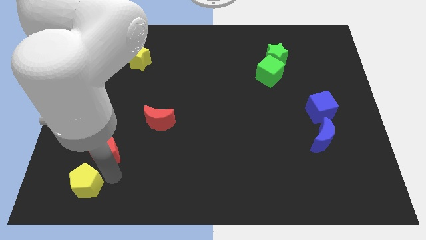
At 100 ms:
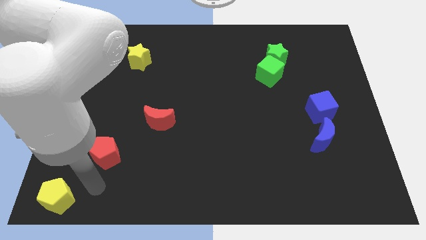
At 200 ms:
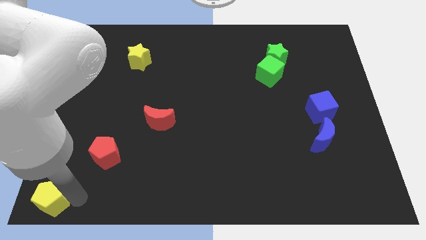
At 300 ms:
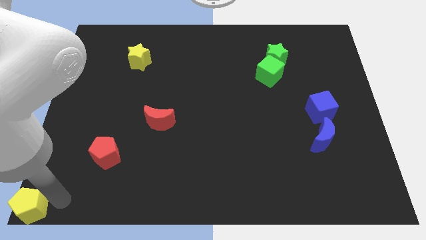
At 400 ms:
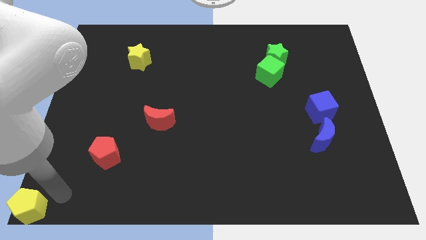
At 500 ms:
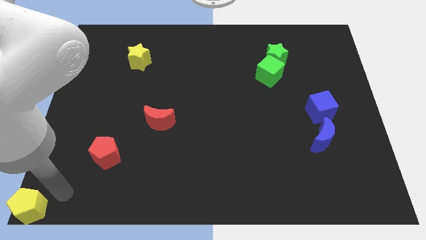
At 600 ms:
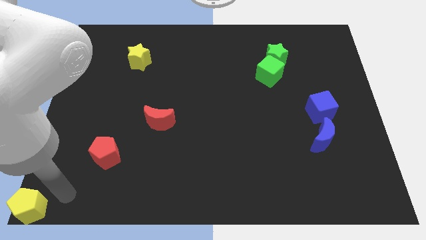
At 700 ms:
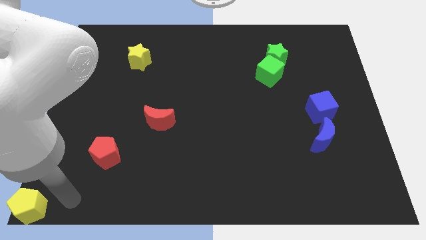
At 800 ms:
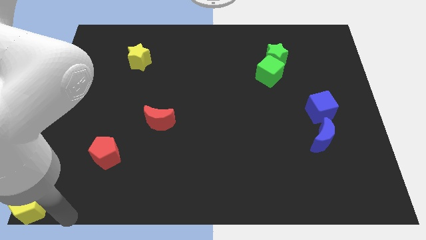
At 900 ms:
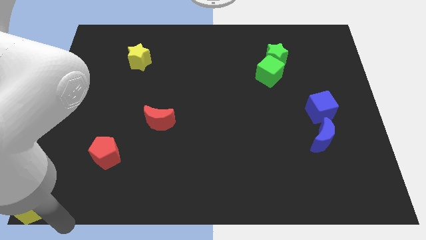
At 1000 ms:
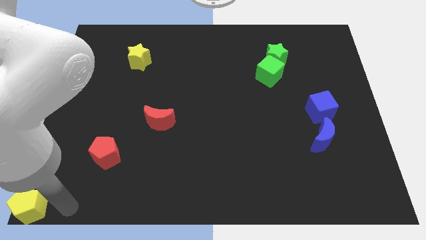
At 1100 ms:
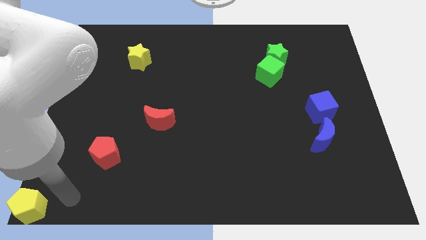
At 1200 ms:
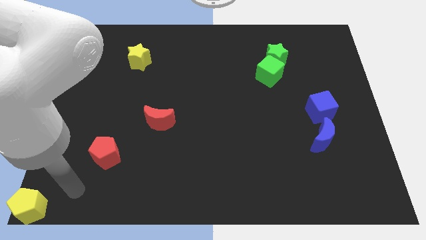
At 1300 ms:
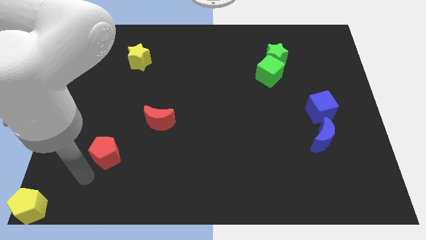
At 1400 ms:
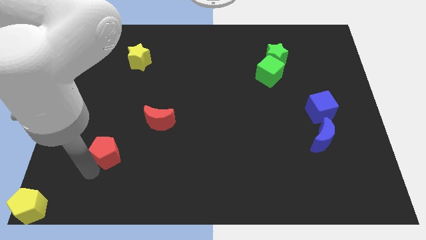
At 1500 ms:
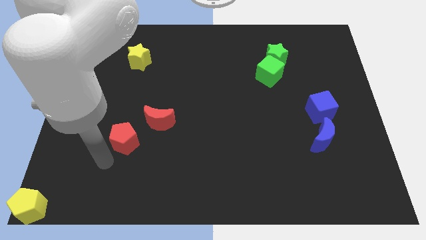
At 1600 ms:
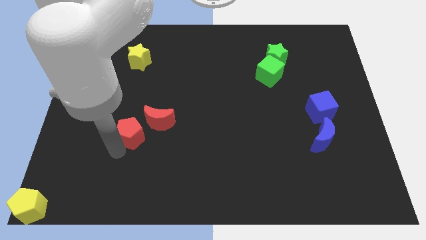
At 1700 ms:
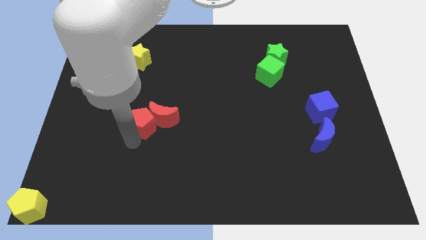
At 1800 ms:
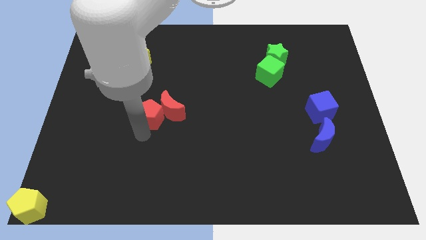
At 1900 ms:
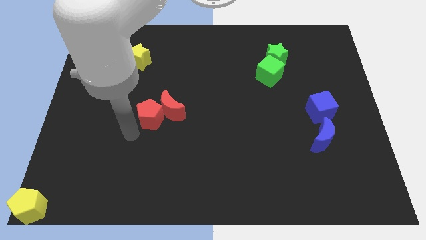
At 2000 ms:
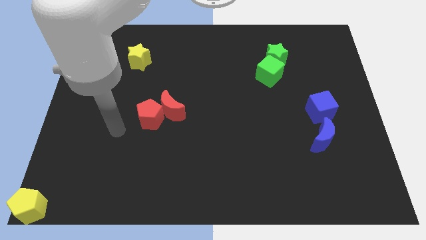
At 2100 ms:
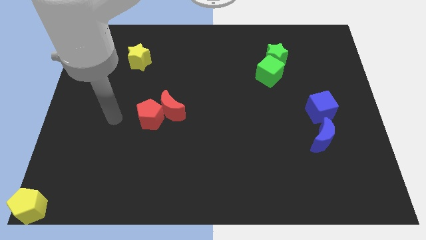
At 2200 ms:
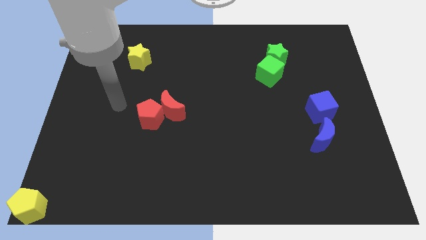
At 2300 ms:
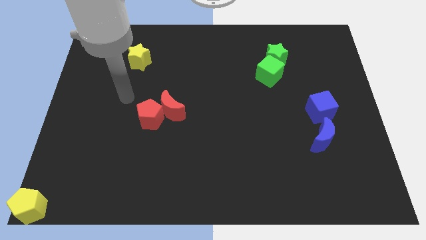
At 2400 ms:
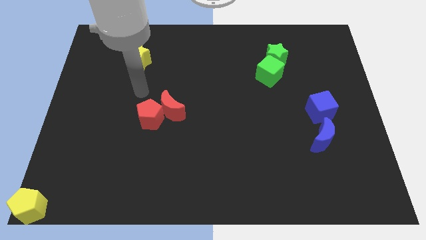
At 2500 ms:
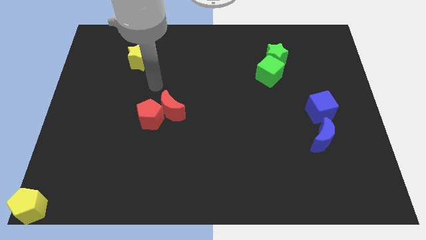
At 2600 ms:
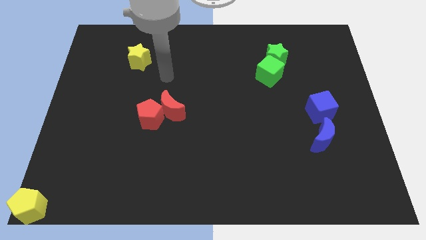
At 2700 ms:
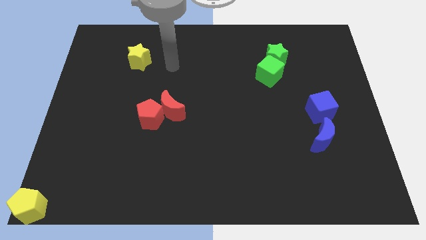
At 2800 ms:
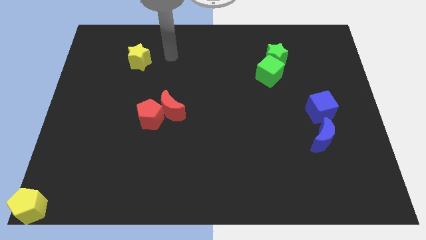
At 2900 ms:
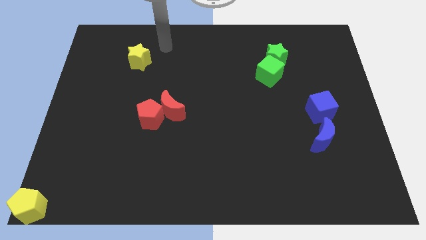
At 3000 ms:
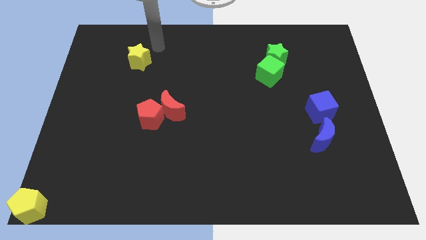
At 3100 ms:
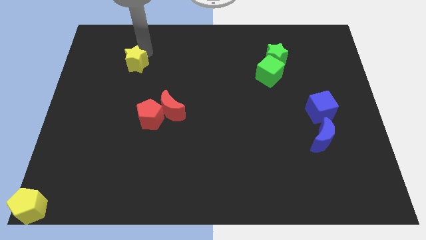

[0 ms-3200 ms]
move the red pentagon into the red crescent

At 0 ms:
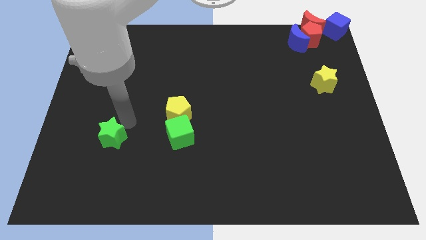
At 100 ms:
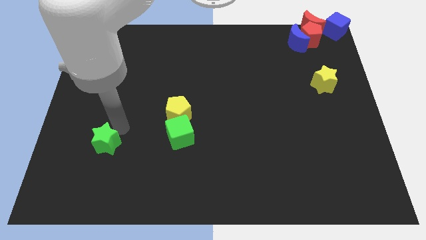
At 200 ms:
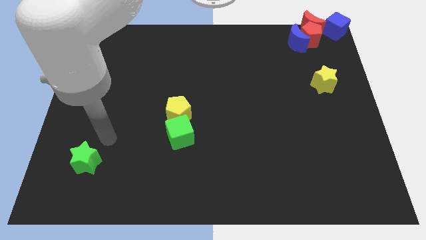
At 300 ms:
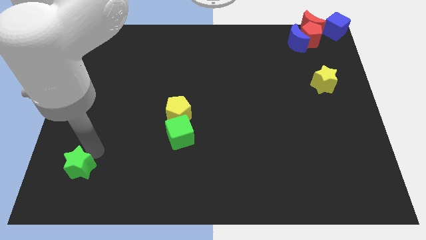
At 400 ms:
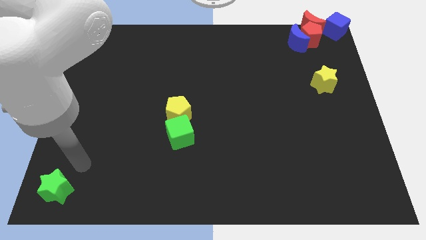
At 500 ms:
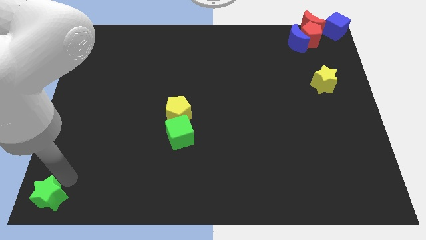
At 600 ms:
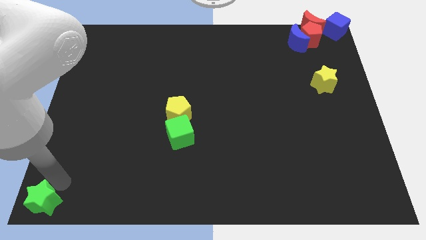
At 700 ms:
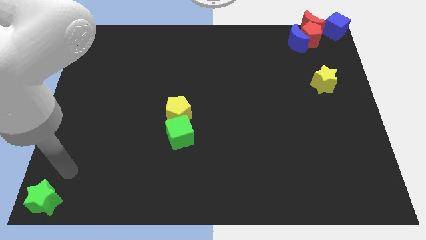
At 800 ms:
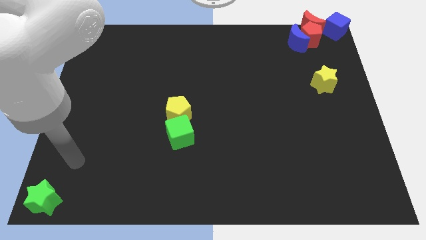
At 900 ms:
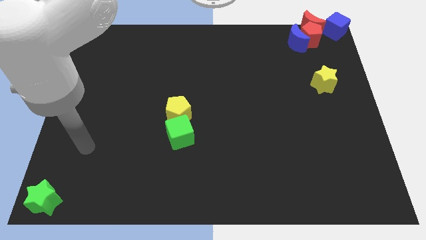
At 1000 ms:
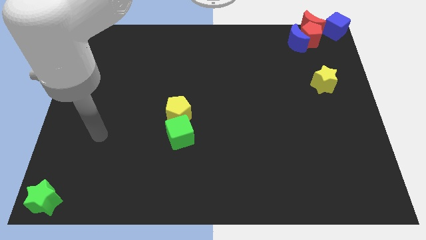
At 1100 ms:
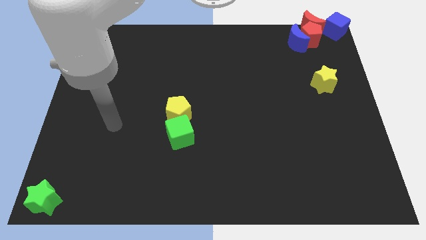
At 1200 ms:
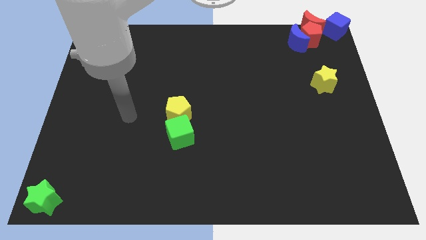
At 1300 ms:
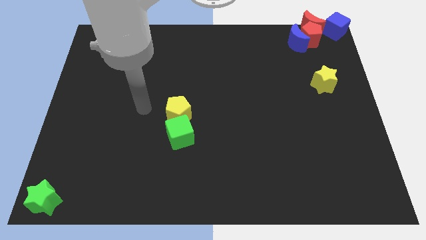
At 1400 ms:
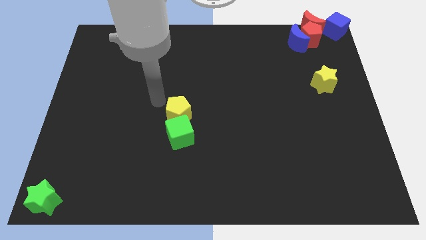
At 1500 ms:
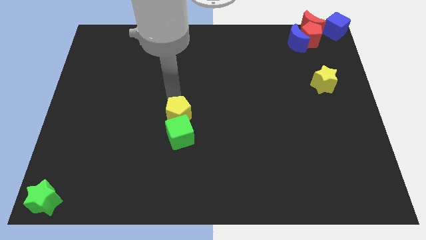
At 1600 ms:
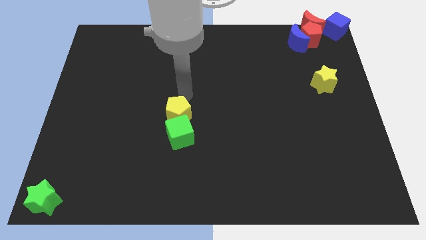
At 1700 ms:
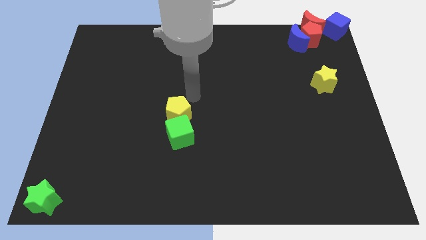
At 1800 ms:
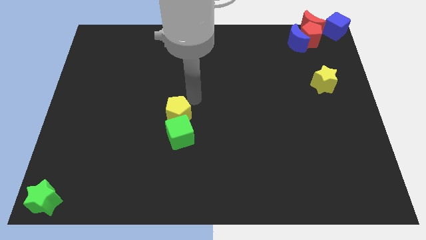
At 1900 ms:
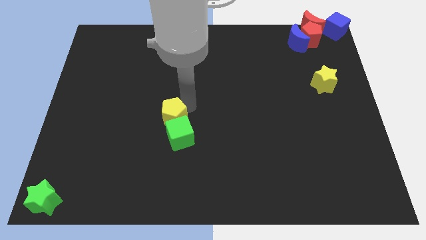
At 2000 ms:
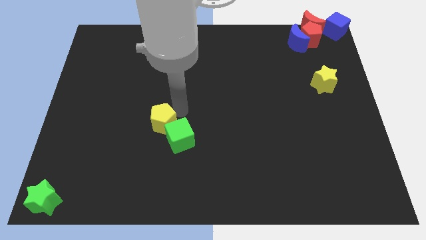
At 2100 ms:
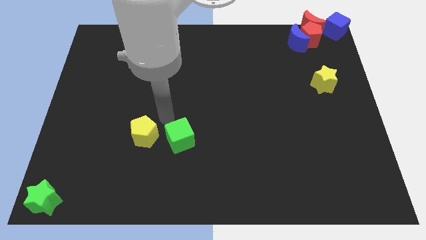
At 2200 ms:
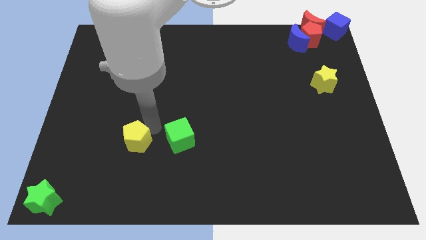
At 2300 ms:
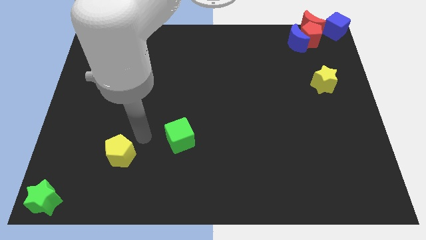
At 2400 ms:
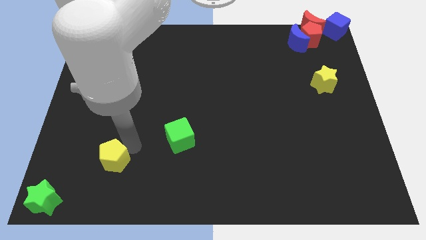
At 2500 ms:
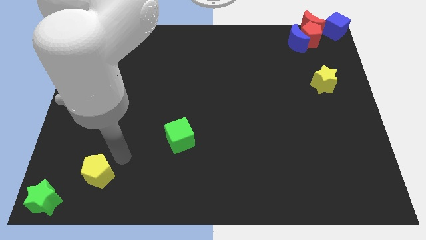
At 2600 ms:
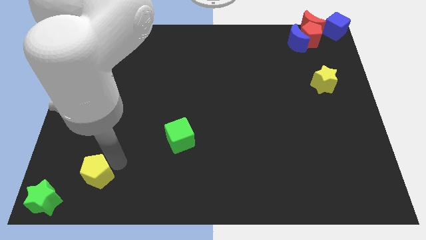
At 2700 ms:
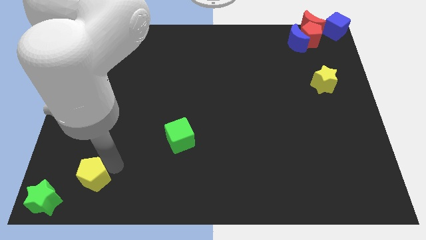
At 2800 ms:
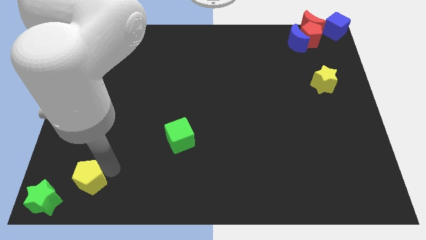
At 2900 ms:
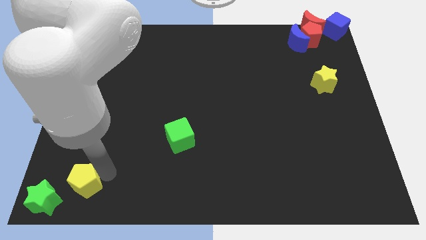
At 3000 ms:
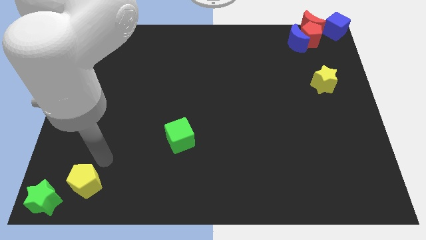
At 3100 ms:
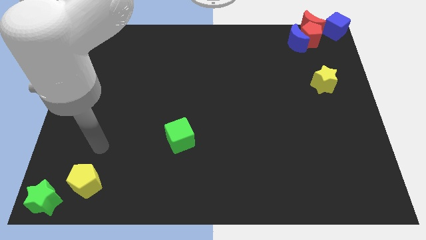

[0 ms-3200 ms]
put the green star and yellow pentagon diagonally on the bottom left side of the green cube

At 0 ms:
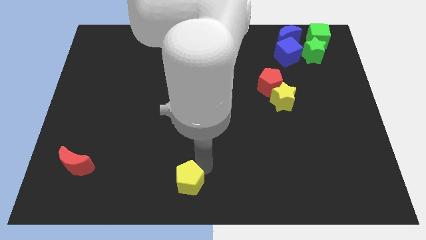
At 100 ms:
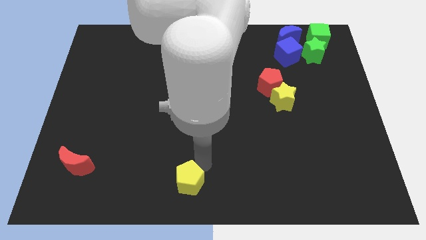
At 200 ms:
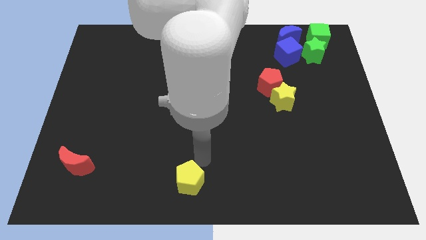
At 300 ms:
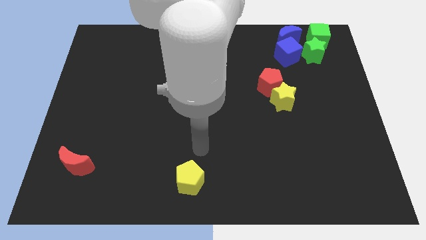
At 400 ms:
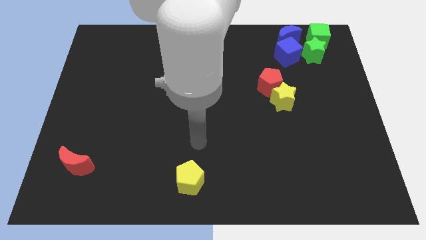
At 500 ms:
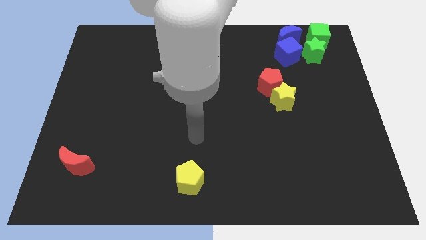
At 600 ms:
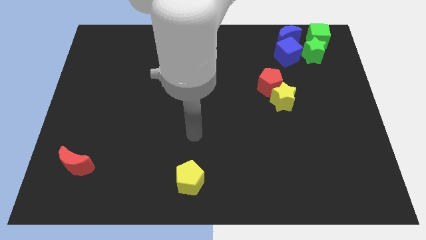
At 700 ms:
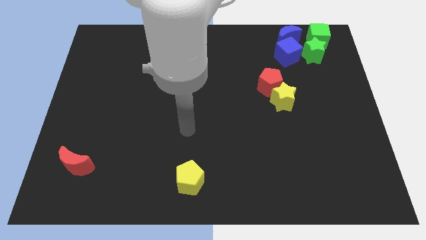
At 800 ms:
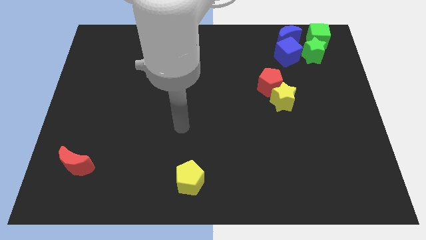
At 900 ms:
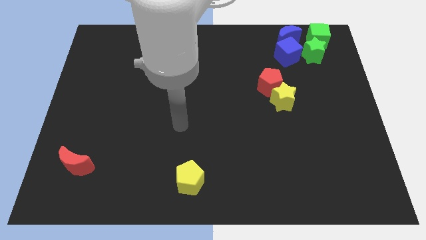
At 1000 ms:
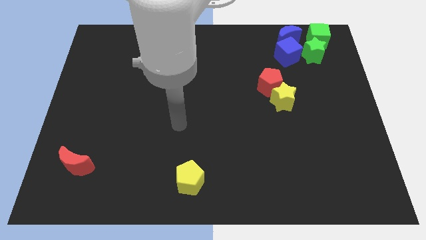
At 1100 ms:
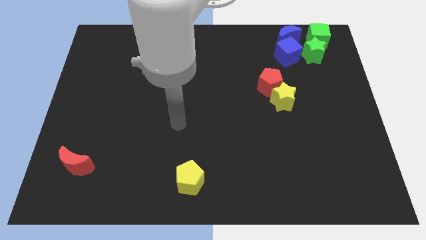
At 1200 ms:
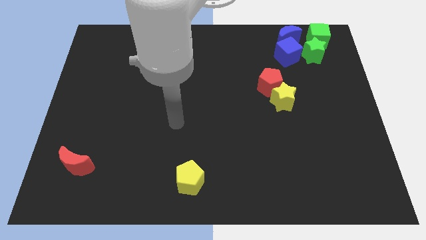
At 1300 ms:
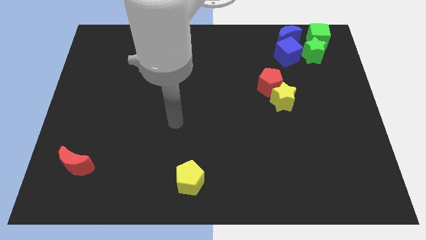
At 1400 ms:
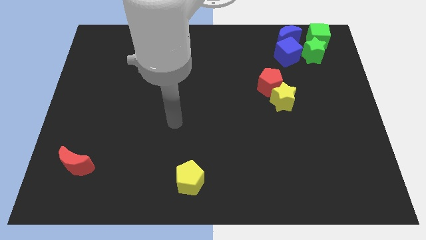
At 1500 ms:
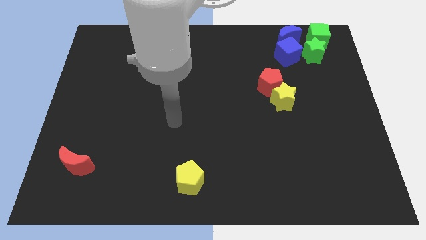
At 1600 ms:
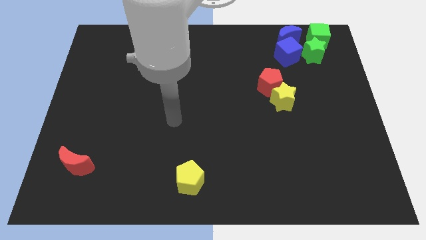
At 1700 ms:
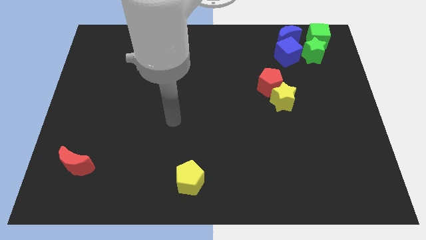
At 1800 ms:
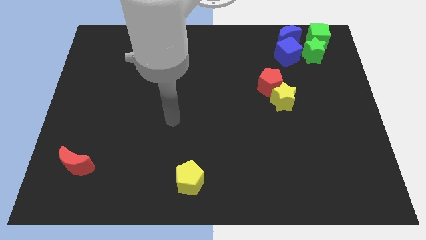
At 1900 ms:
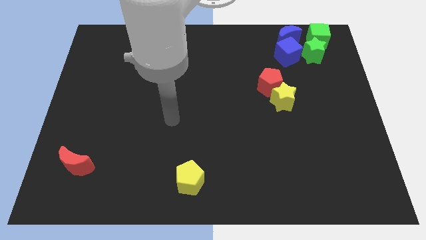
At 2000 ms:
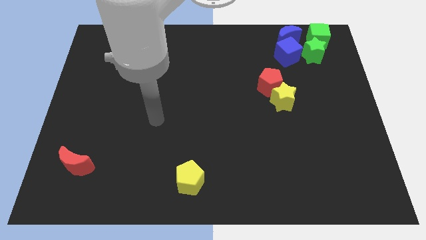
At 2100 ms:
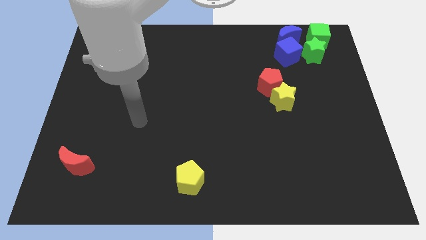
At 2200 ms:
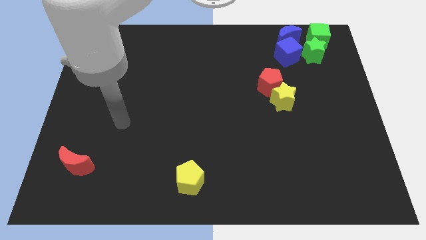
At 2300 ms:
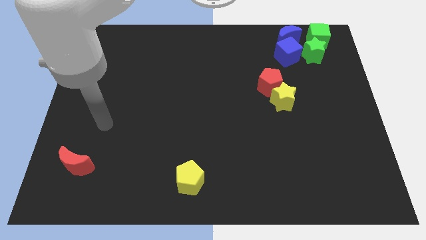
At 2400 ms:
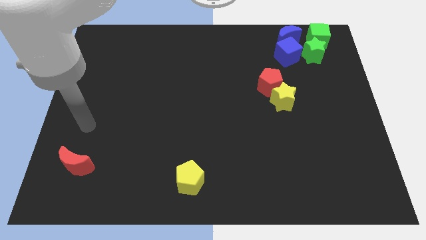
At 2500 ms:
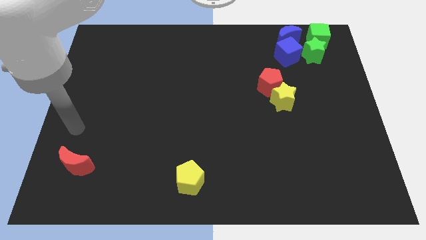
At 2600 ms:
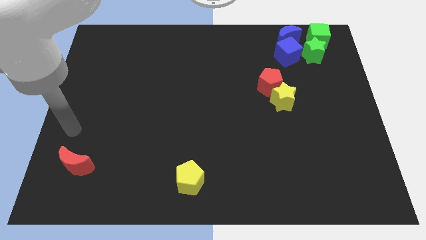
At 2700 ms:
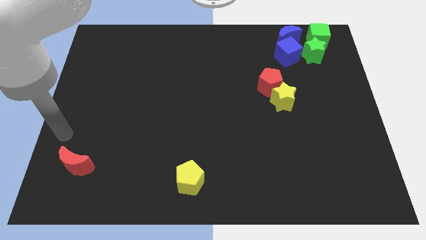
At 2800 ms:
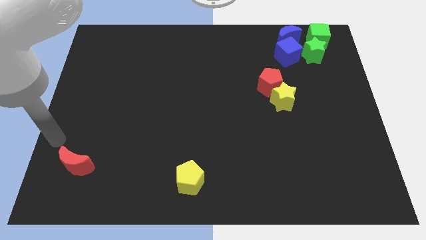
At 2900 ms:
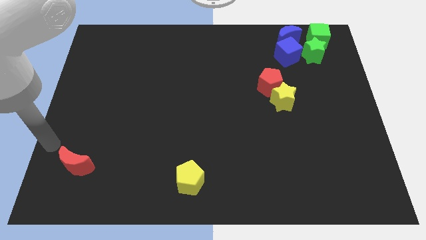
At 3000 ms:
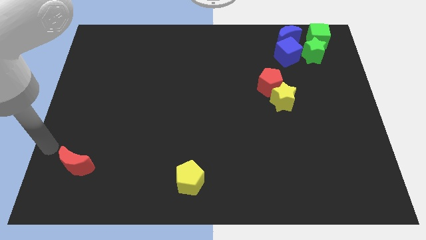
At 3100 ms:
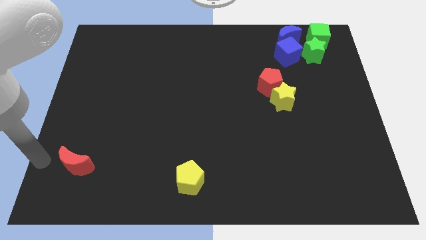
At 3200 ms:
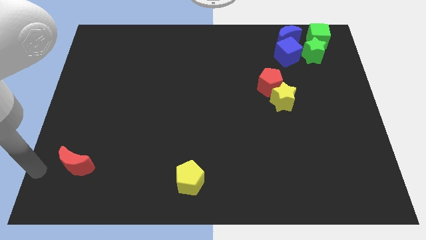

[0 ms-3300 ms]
move the arm left to the red crescent
